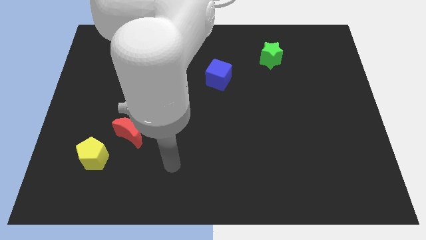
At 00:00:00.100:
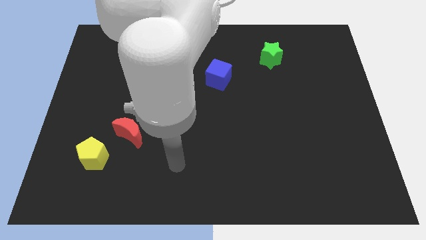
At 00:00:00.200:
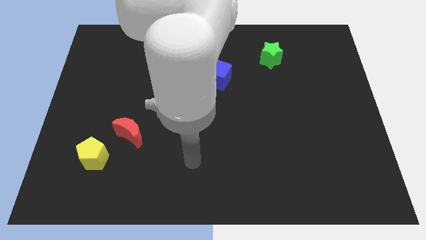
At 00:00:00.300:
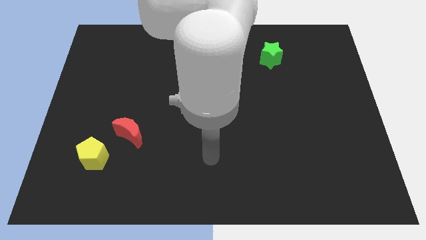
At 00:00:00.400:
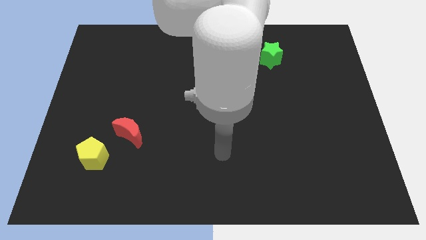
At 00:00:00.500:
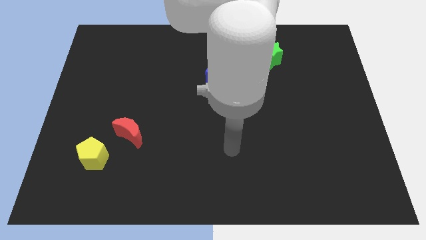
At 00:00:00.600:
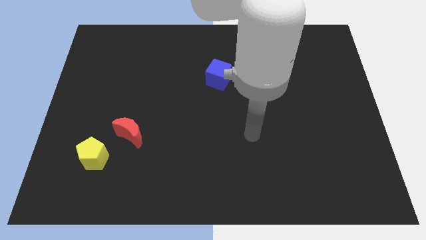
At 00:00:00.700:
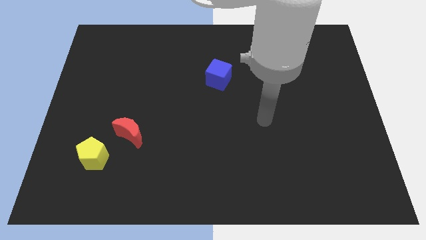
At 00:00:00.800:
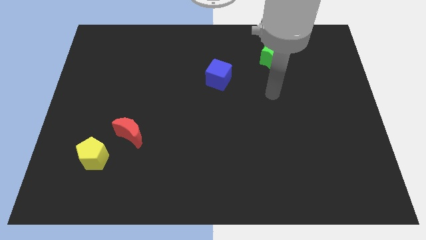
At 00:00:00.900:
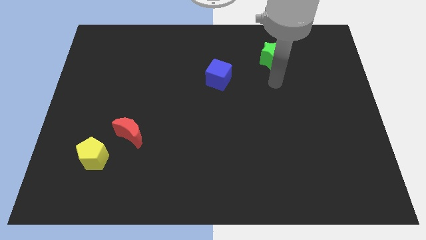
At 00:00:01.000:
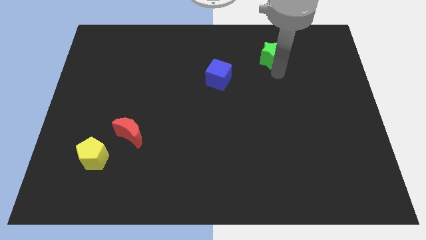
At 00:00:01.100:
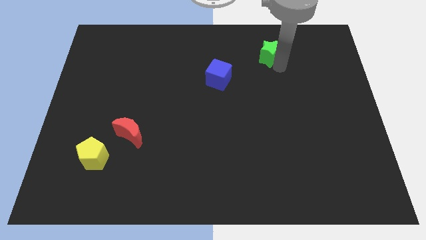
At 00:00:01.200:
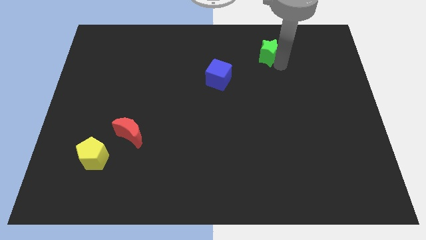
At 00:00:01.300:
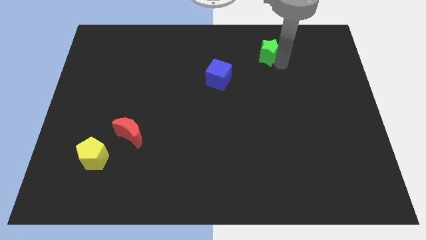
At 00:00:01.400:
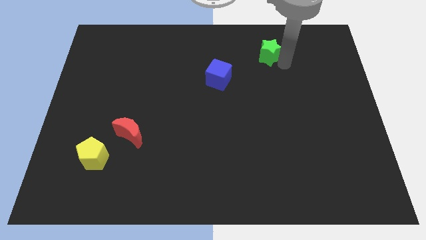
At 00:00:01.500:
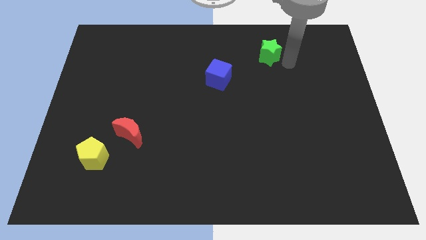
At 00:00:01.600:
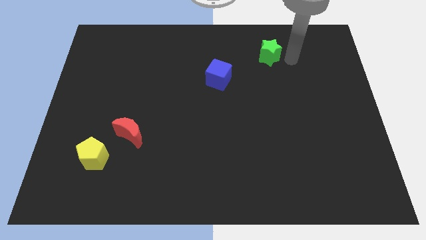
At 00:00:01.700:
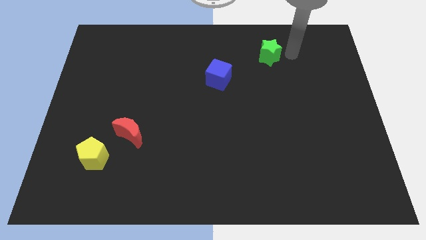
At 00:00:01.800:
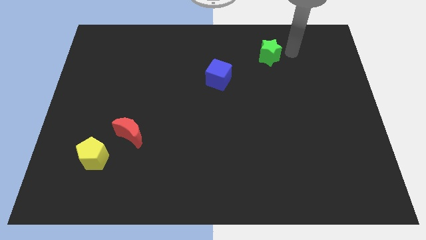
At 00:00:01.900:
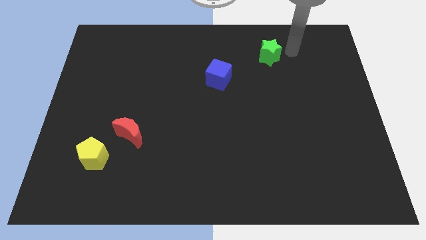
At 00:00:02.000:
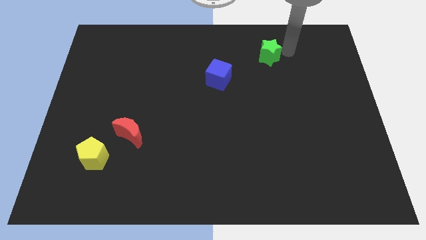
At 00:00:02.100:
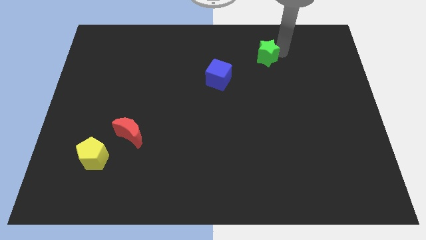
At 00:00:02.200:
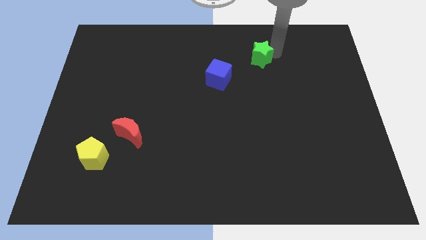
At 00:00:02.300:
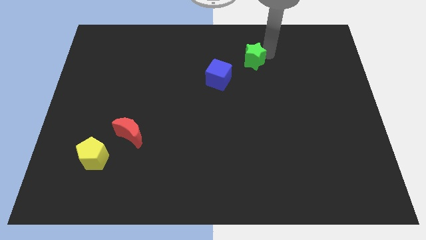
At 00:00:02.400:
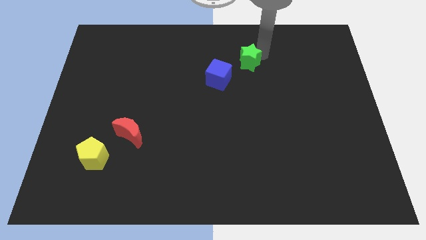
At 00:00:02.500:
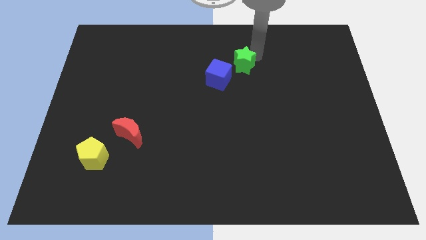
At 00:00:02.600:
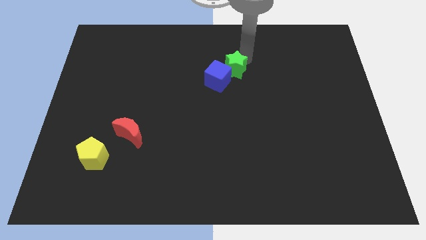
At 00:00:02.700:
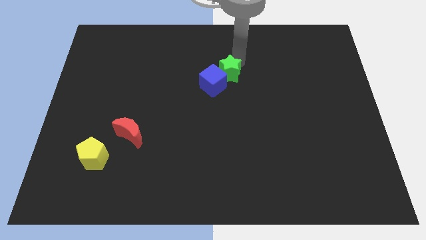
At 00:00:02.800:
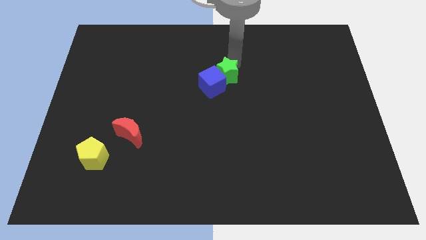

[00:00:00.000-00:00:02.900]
slide the star close to the cube

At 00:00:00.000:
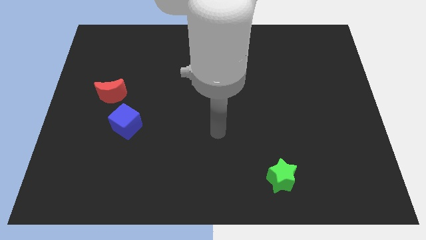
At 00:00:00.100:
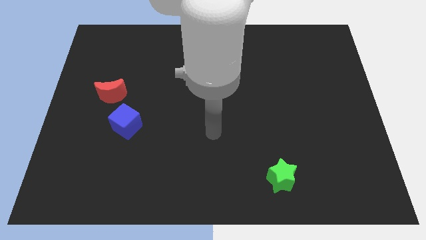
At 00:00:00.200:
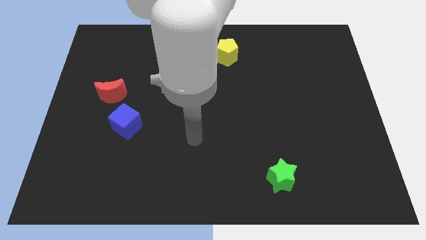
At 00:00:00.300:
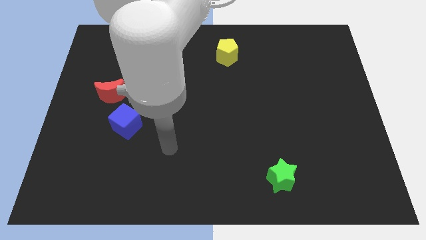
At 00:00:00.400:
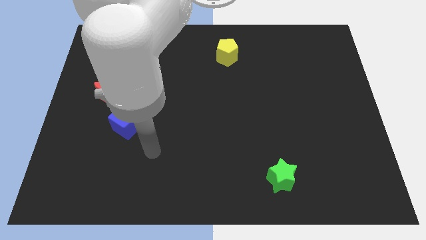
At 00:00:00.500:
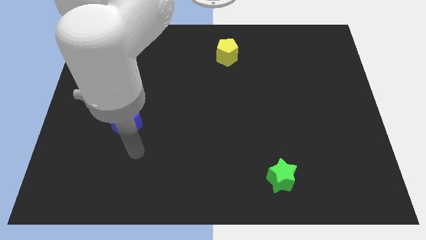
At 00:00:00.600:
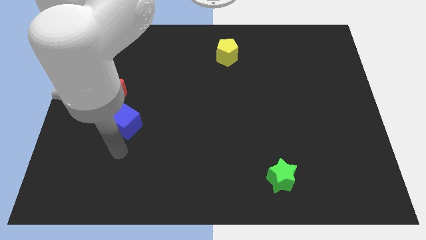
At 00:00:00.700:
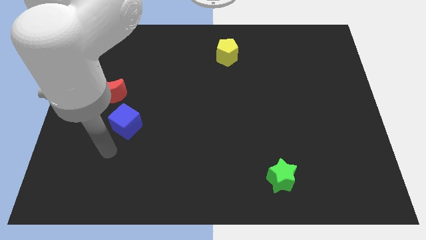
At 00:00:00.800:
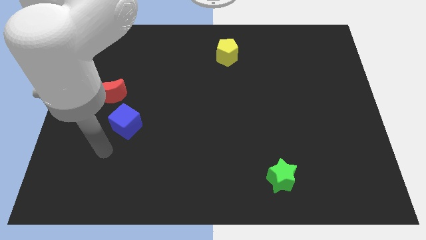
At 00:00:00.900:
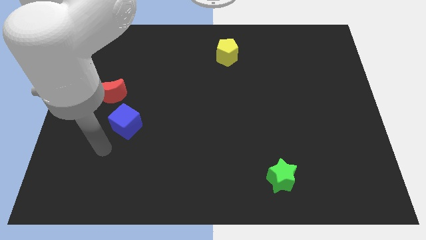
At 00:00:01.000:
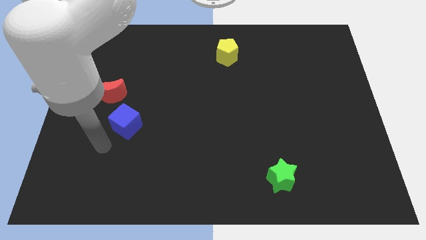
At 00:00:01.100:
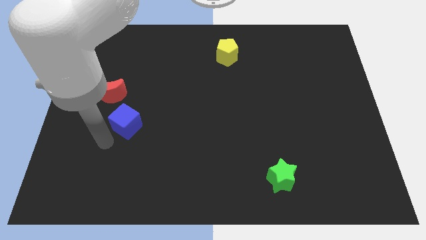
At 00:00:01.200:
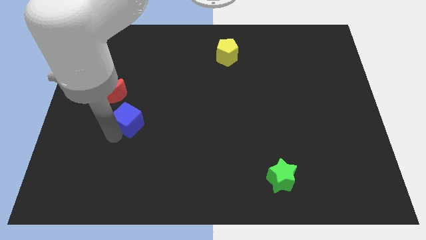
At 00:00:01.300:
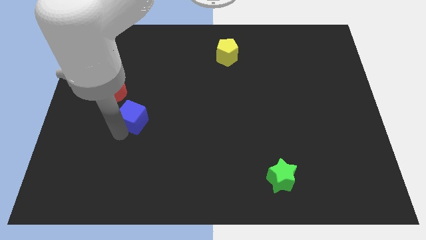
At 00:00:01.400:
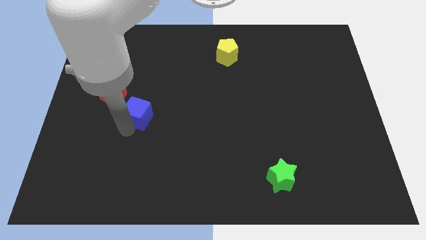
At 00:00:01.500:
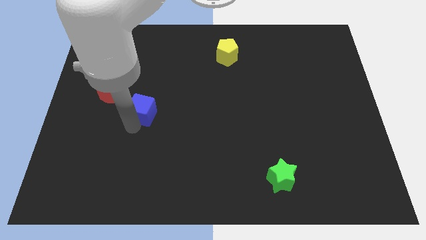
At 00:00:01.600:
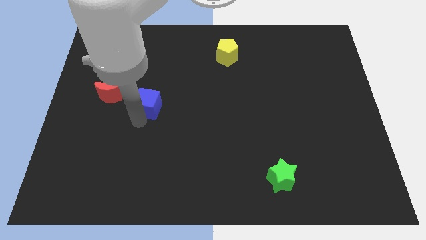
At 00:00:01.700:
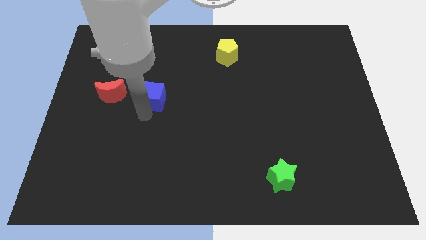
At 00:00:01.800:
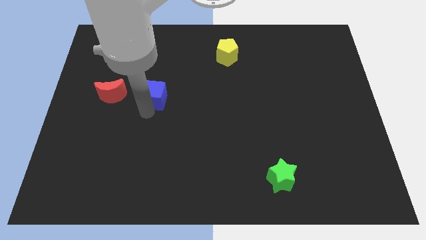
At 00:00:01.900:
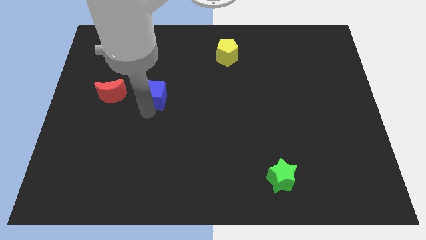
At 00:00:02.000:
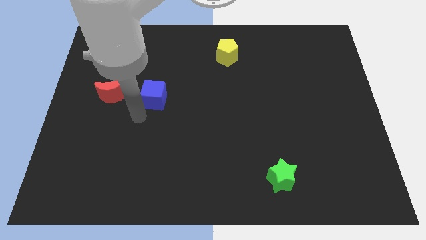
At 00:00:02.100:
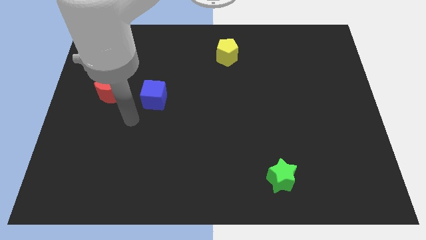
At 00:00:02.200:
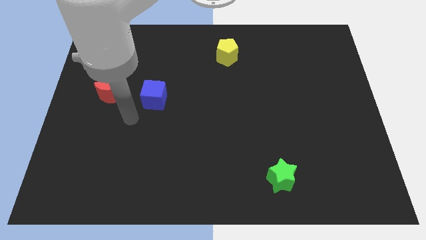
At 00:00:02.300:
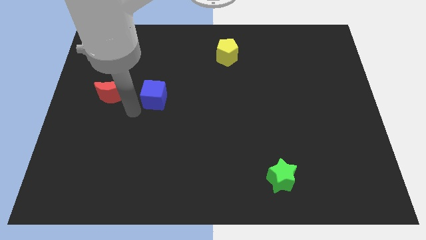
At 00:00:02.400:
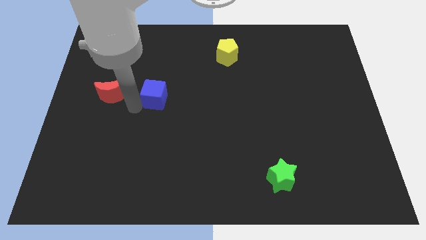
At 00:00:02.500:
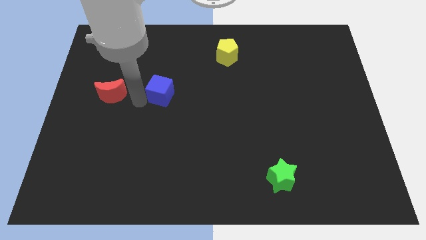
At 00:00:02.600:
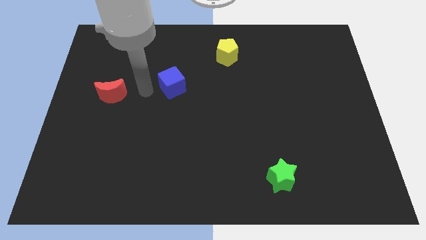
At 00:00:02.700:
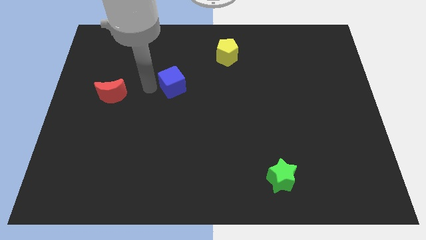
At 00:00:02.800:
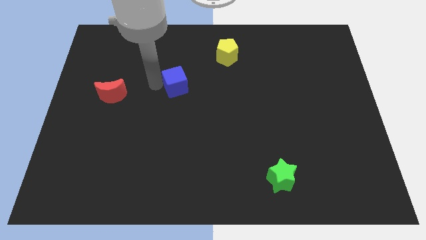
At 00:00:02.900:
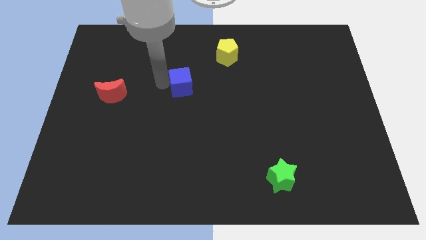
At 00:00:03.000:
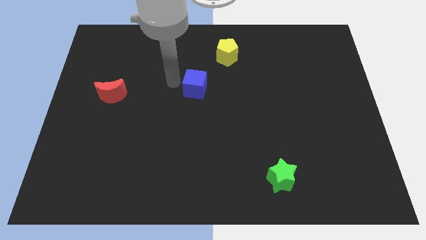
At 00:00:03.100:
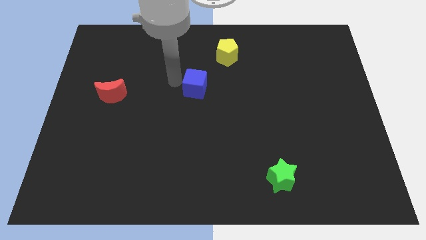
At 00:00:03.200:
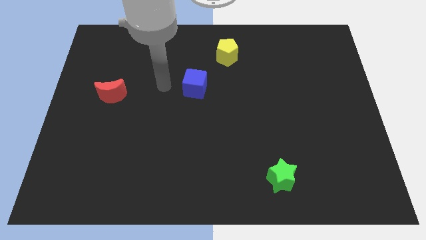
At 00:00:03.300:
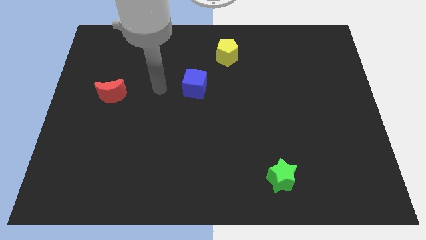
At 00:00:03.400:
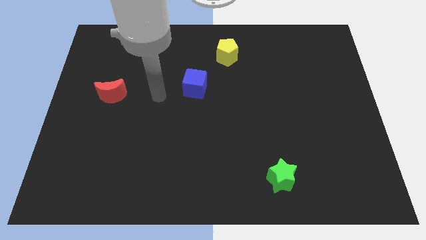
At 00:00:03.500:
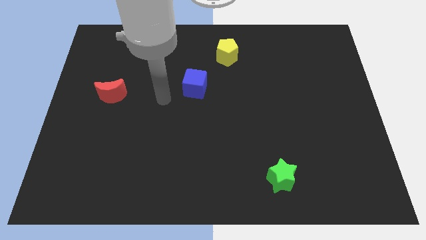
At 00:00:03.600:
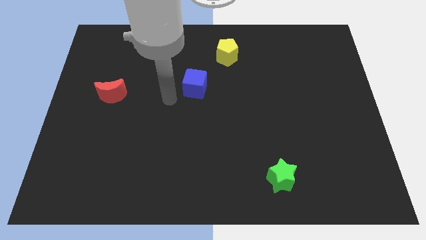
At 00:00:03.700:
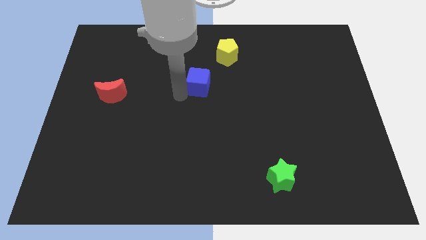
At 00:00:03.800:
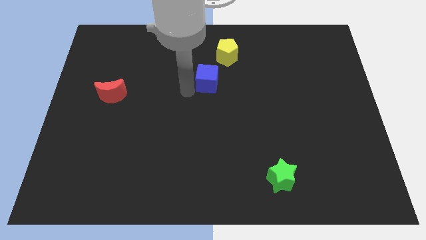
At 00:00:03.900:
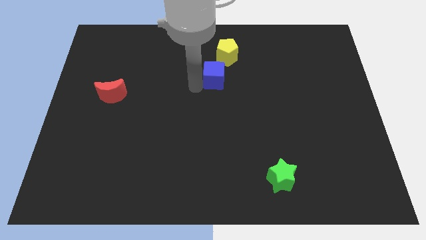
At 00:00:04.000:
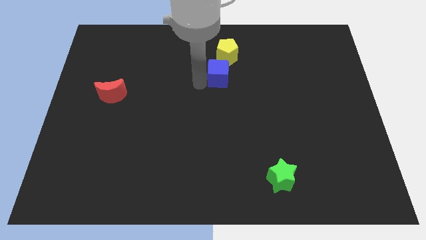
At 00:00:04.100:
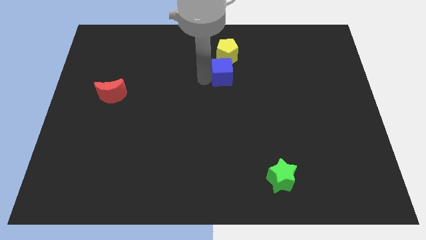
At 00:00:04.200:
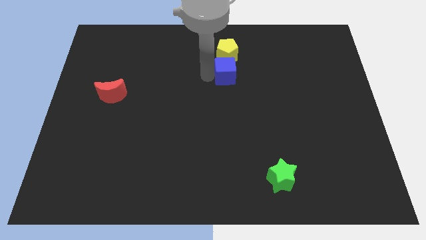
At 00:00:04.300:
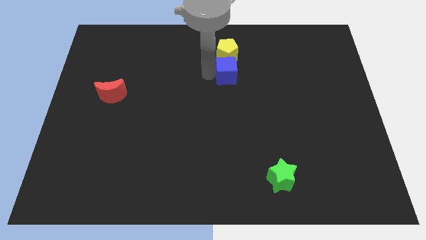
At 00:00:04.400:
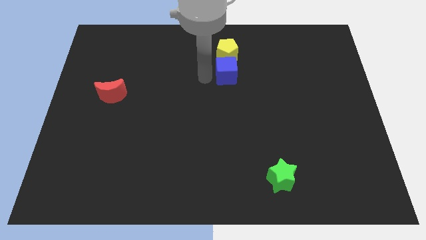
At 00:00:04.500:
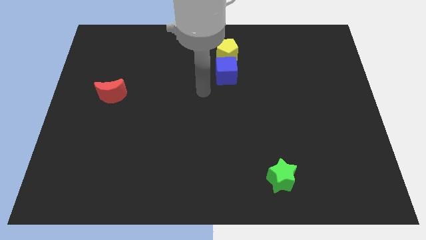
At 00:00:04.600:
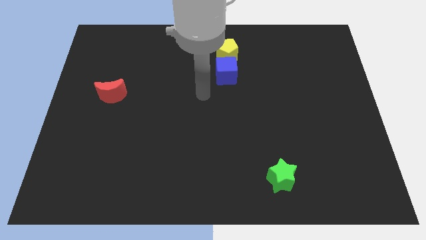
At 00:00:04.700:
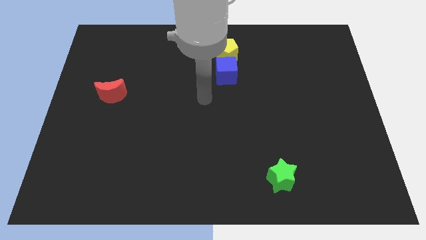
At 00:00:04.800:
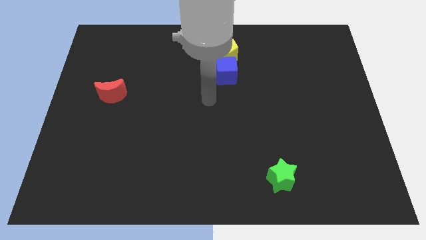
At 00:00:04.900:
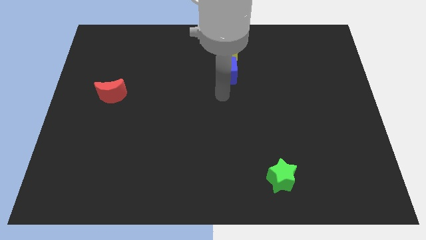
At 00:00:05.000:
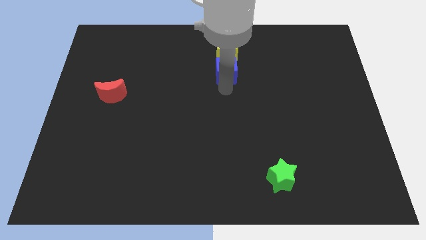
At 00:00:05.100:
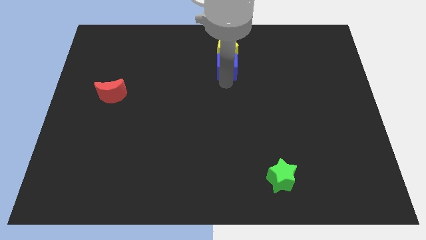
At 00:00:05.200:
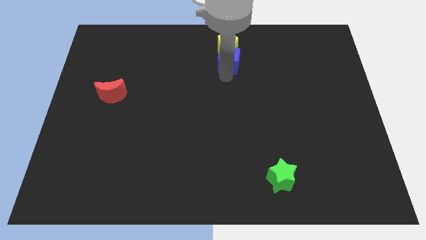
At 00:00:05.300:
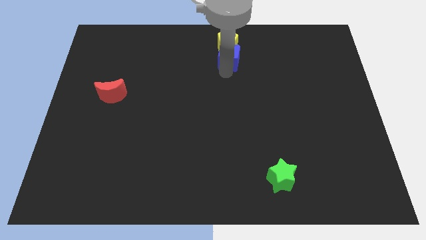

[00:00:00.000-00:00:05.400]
slide the blue cube towards the pentagon
